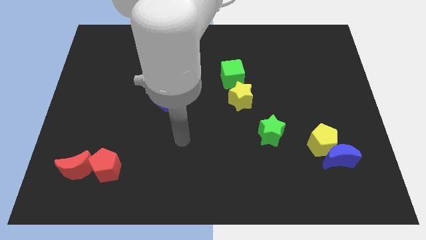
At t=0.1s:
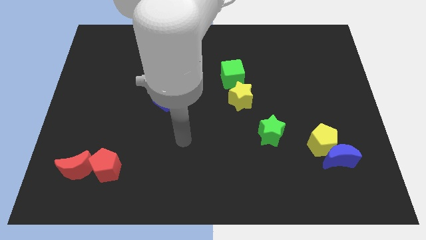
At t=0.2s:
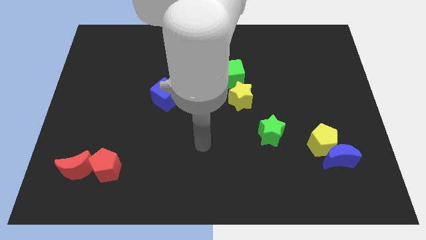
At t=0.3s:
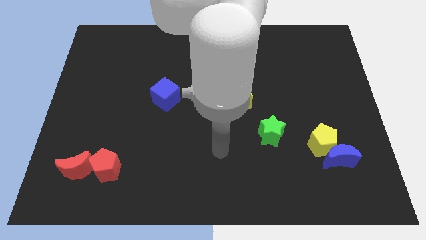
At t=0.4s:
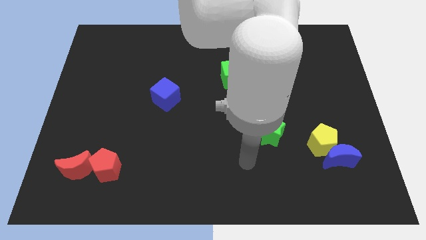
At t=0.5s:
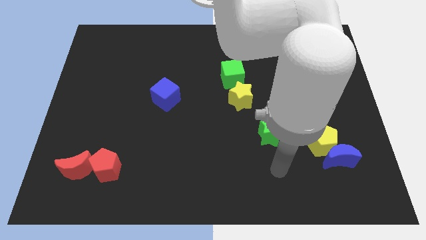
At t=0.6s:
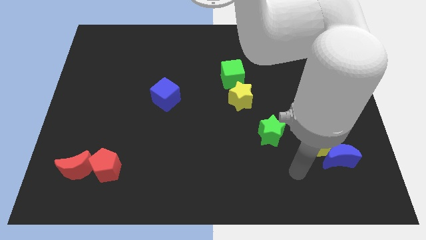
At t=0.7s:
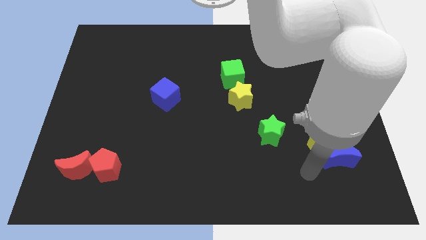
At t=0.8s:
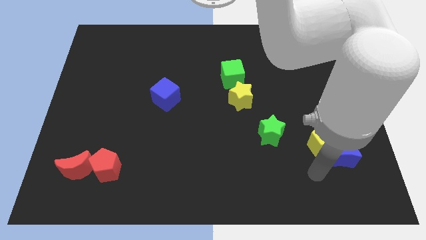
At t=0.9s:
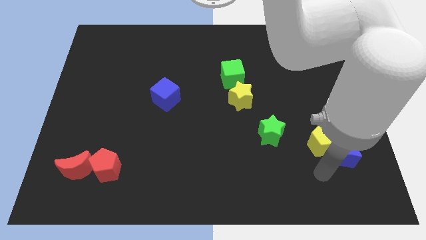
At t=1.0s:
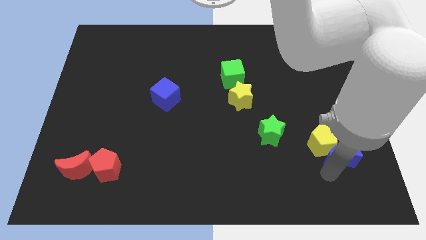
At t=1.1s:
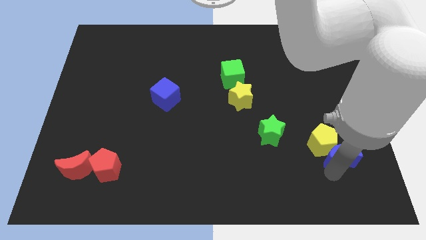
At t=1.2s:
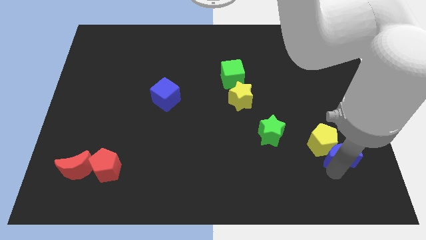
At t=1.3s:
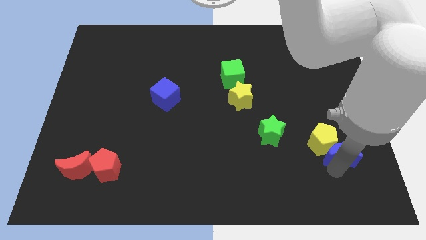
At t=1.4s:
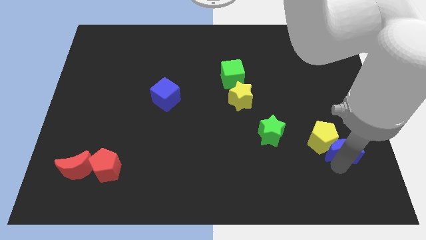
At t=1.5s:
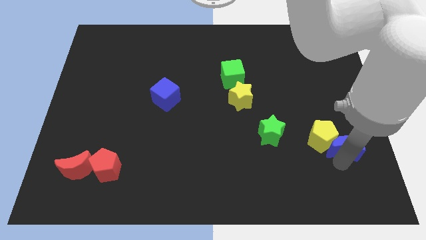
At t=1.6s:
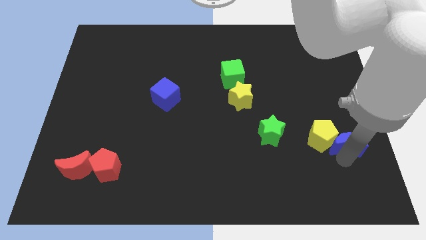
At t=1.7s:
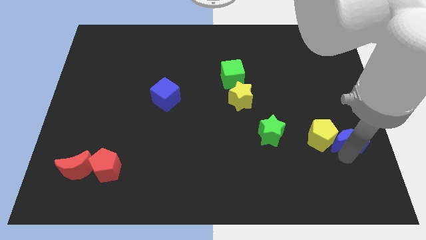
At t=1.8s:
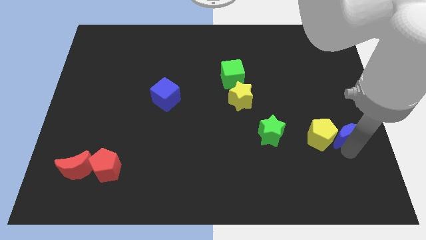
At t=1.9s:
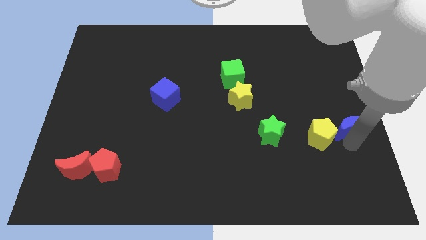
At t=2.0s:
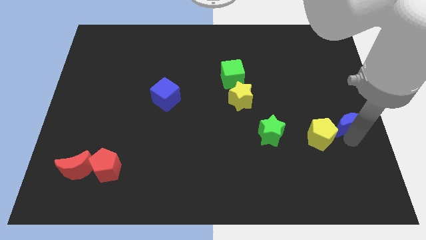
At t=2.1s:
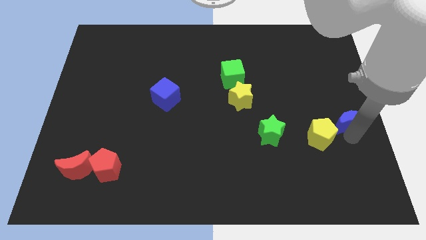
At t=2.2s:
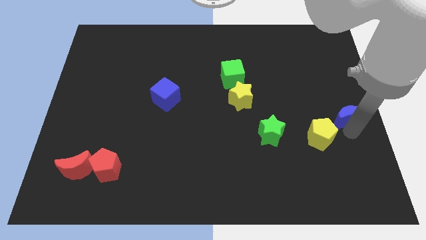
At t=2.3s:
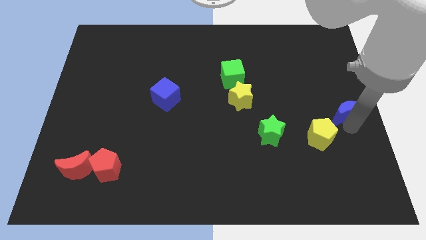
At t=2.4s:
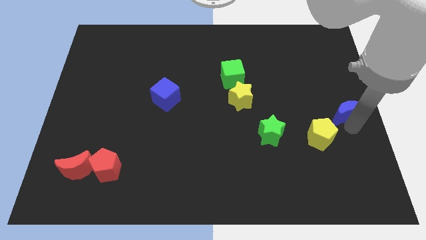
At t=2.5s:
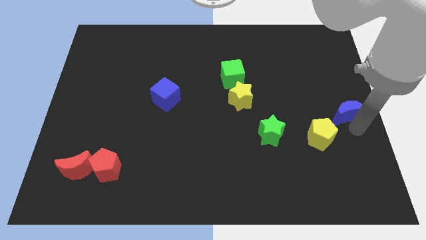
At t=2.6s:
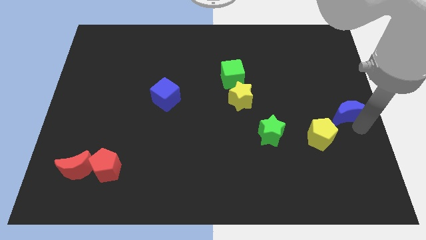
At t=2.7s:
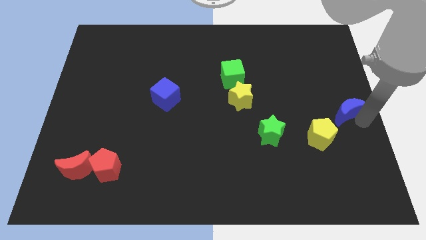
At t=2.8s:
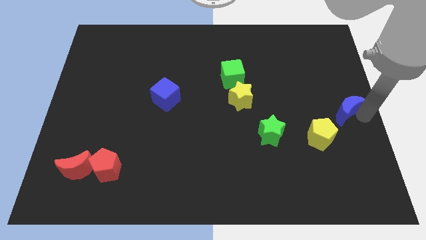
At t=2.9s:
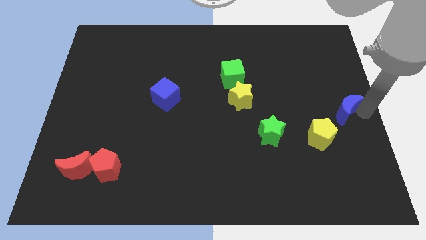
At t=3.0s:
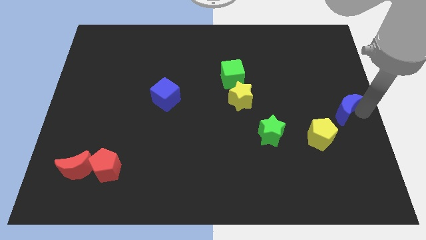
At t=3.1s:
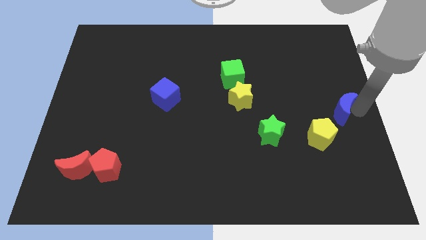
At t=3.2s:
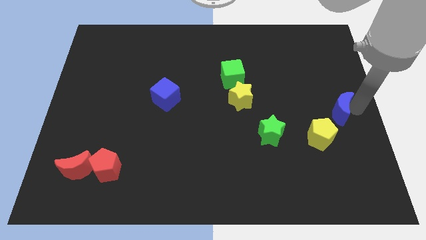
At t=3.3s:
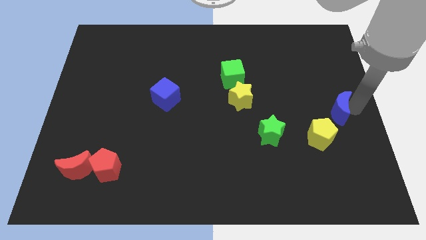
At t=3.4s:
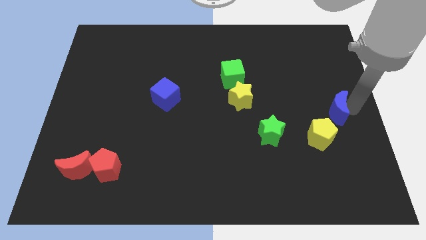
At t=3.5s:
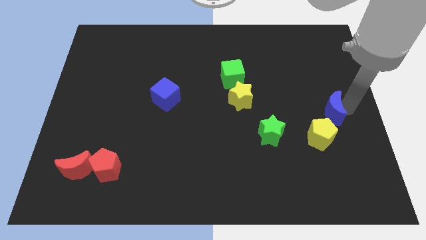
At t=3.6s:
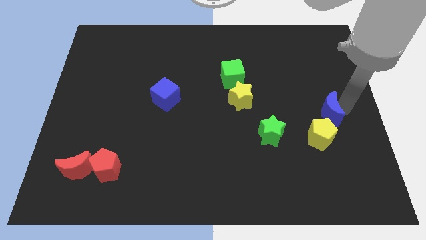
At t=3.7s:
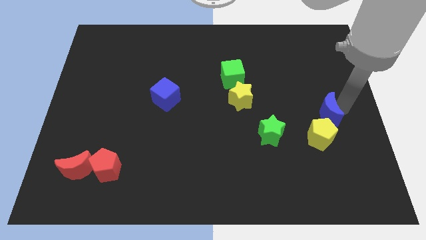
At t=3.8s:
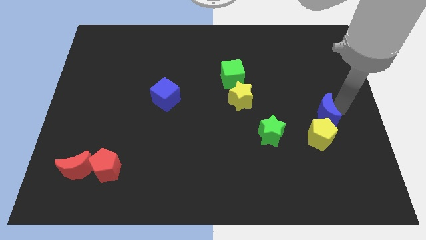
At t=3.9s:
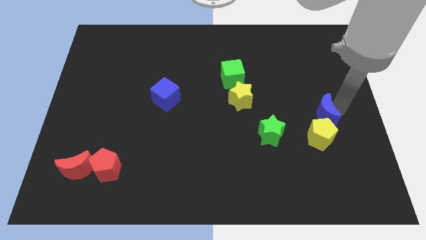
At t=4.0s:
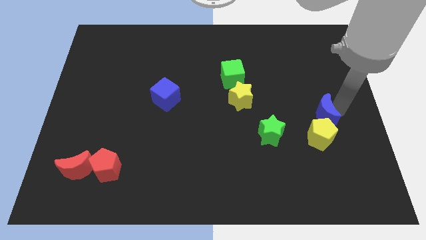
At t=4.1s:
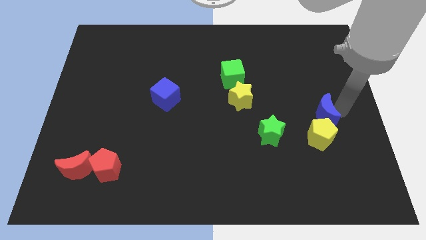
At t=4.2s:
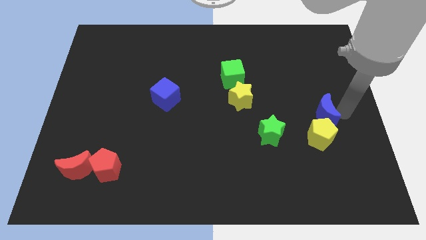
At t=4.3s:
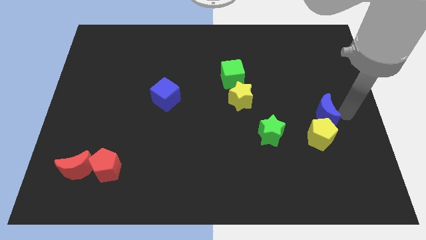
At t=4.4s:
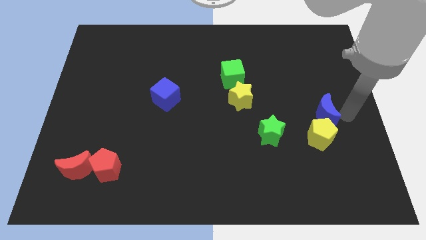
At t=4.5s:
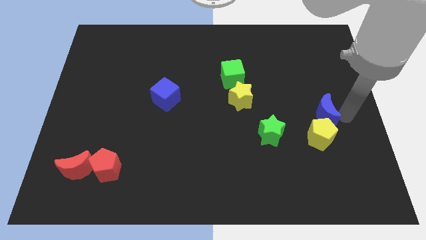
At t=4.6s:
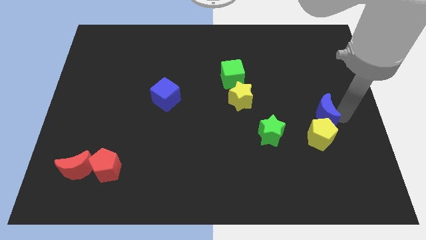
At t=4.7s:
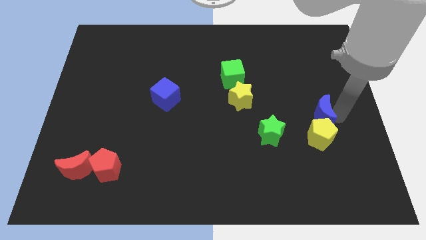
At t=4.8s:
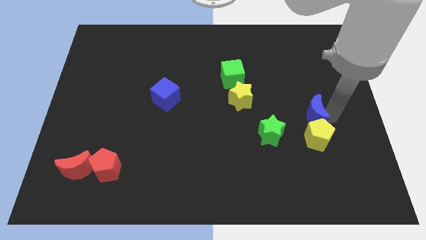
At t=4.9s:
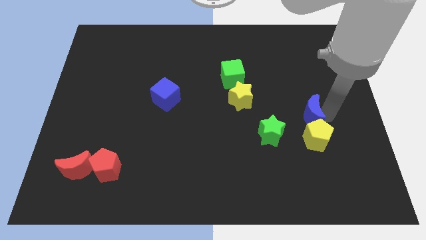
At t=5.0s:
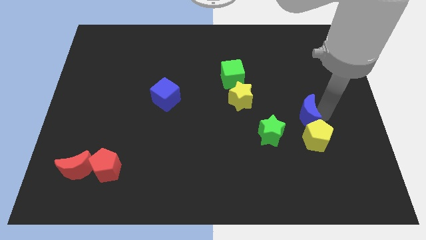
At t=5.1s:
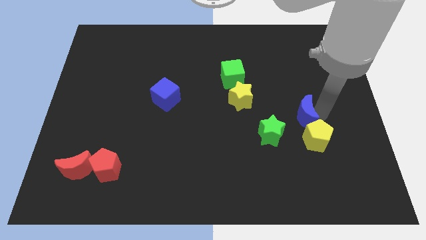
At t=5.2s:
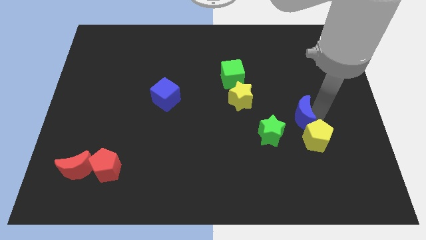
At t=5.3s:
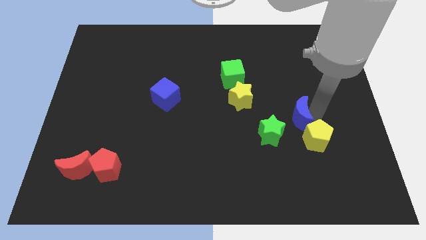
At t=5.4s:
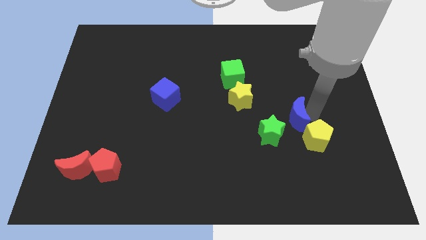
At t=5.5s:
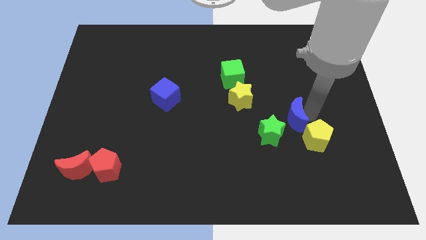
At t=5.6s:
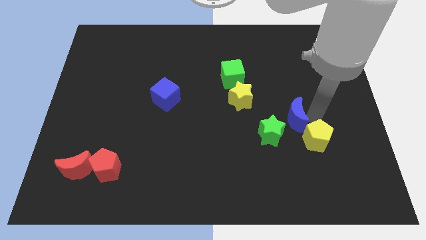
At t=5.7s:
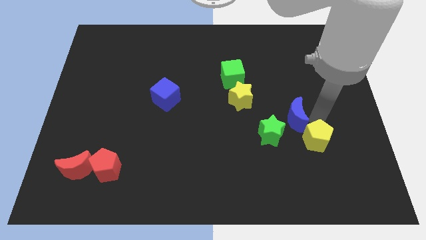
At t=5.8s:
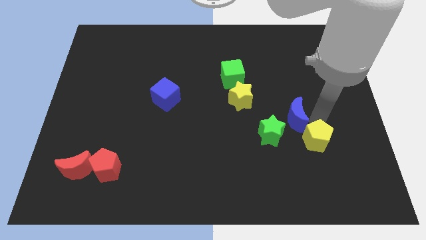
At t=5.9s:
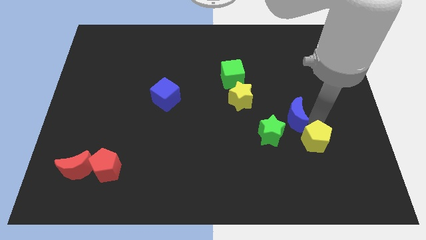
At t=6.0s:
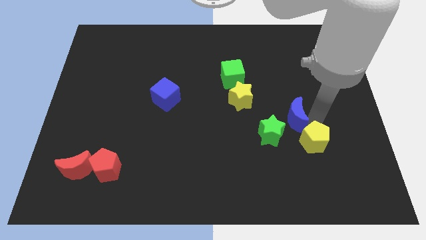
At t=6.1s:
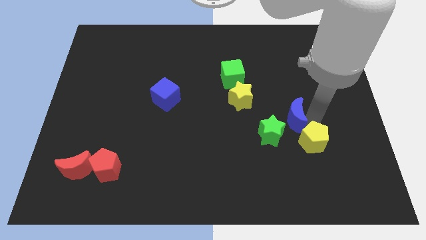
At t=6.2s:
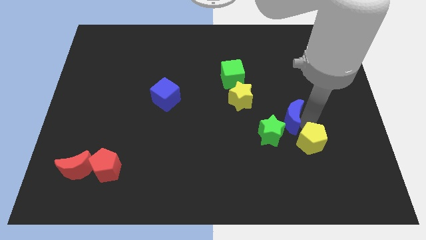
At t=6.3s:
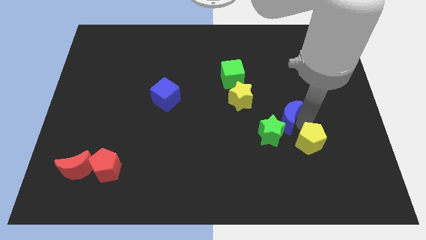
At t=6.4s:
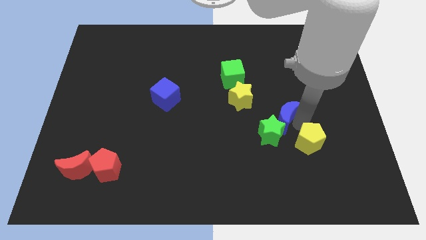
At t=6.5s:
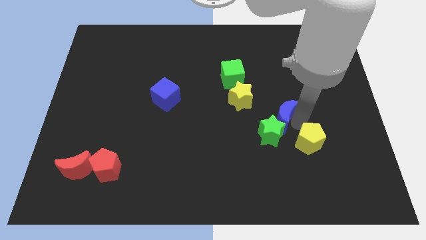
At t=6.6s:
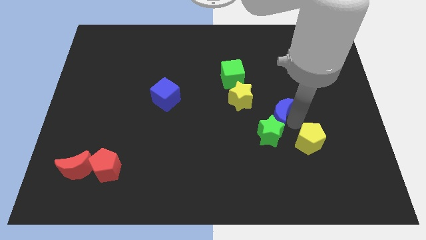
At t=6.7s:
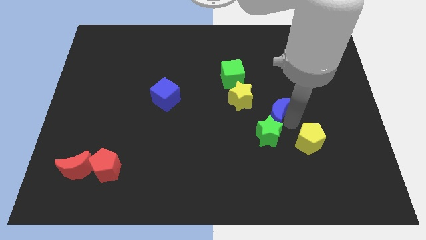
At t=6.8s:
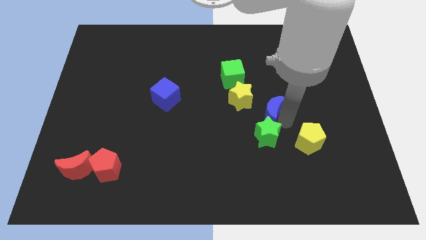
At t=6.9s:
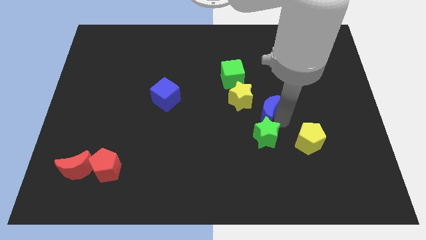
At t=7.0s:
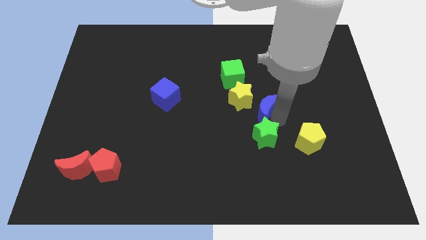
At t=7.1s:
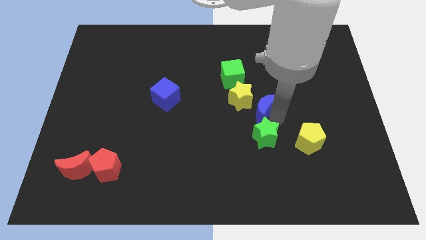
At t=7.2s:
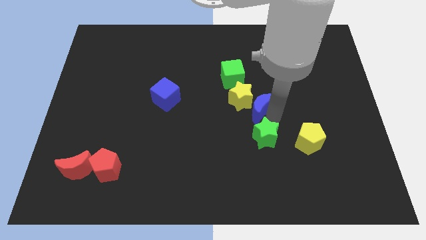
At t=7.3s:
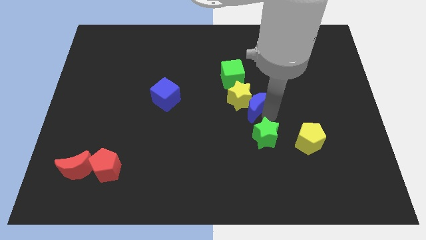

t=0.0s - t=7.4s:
push the blue moon next to the yellow star

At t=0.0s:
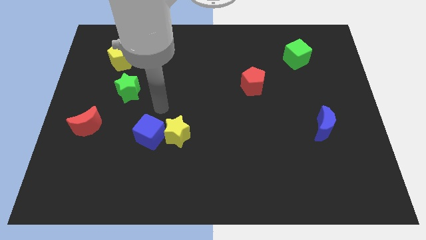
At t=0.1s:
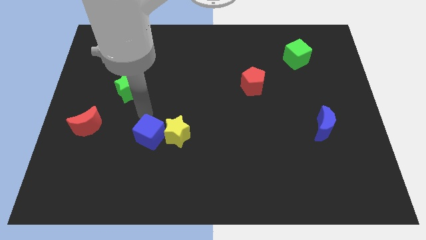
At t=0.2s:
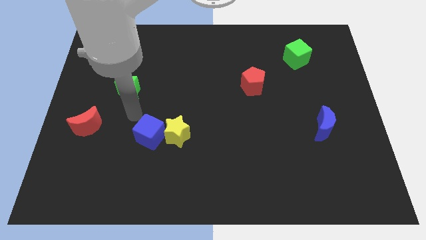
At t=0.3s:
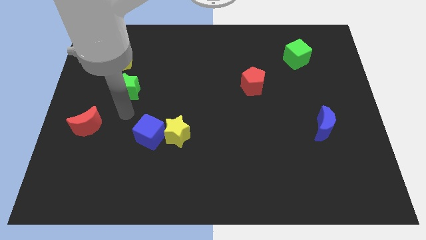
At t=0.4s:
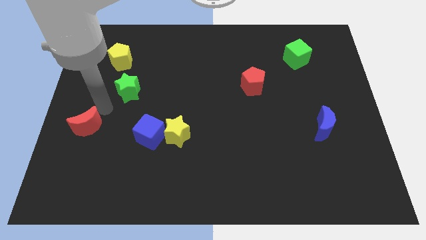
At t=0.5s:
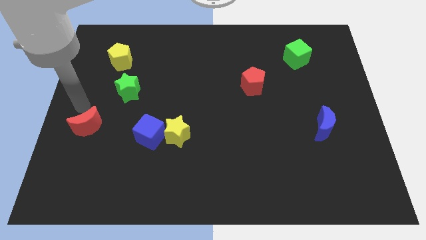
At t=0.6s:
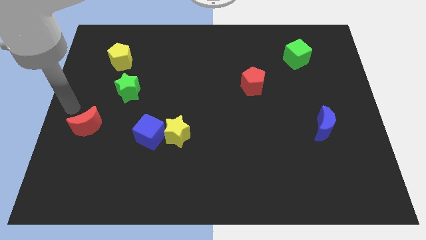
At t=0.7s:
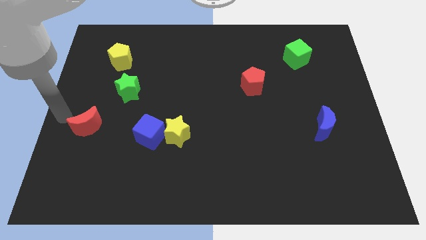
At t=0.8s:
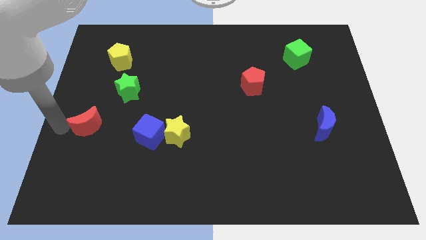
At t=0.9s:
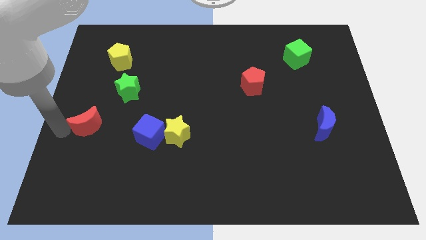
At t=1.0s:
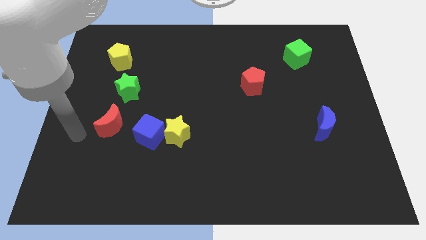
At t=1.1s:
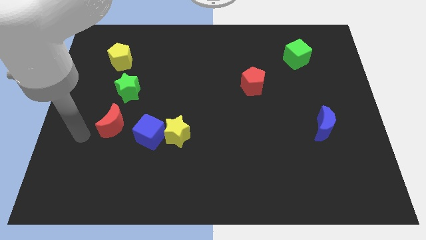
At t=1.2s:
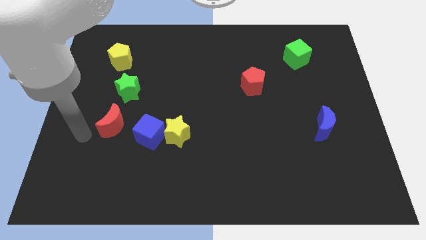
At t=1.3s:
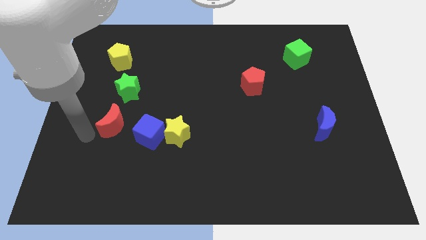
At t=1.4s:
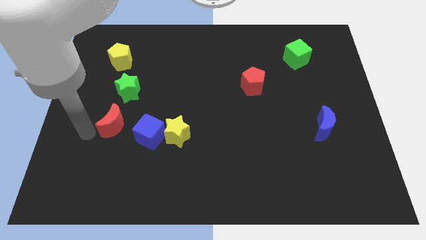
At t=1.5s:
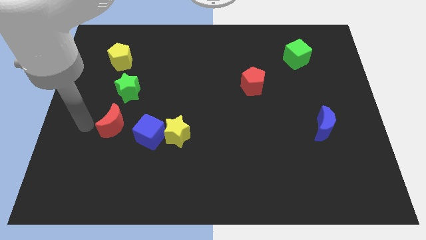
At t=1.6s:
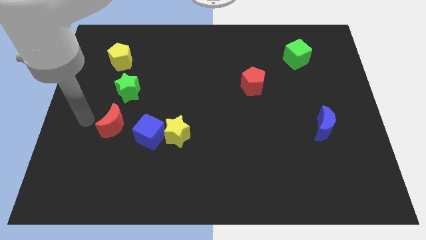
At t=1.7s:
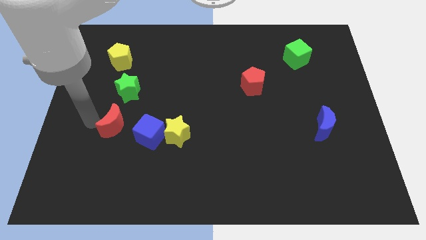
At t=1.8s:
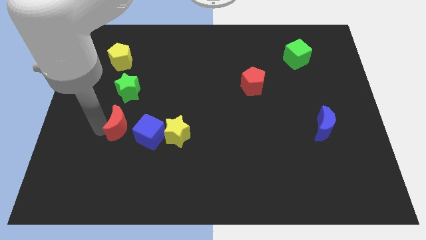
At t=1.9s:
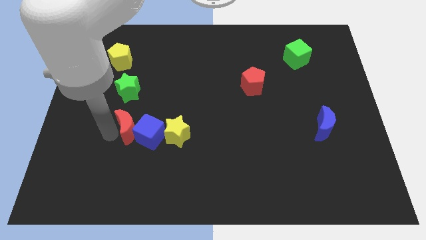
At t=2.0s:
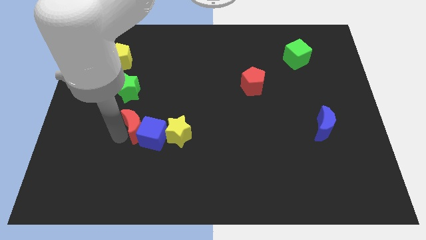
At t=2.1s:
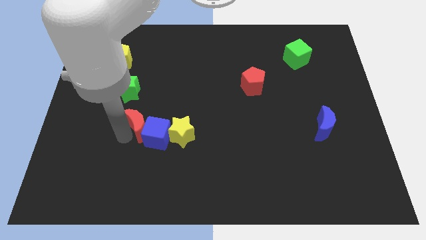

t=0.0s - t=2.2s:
slide the red moon next to the blue cube
